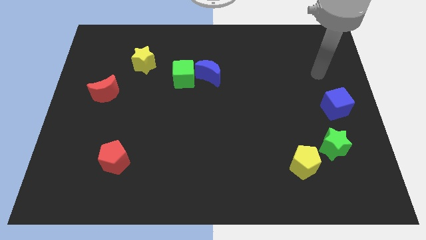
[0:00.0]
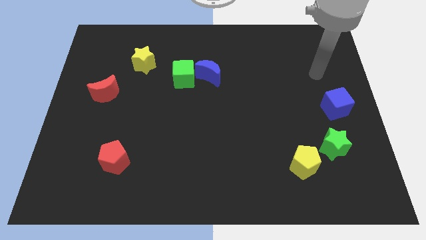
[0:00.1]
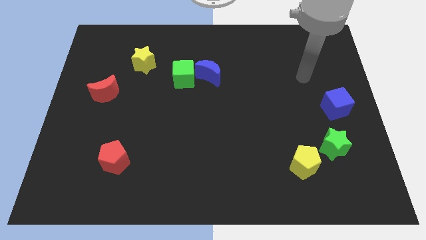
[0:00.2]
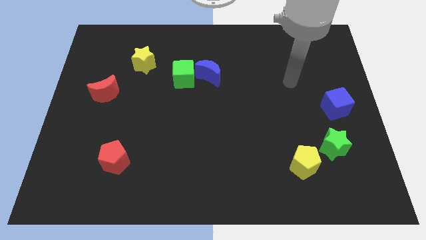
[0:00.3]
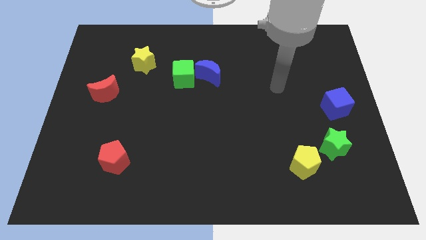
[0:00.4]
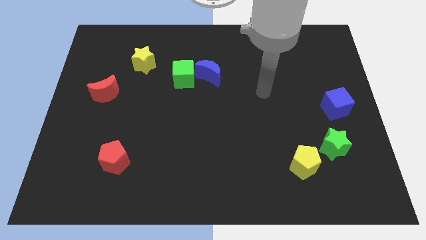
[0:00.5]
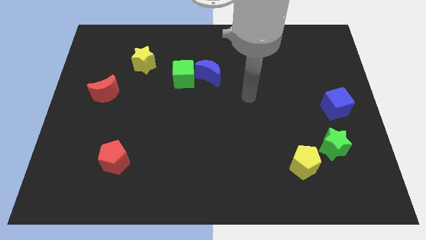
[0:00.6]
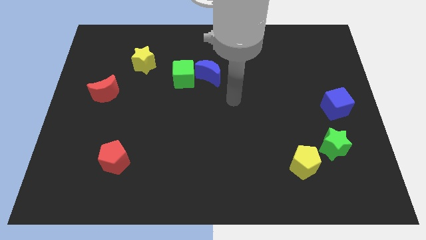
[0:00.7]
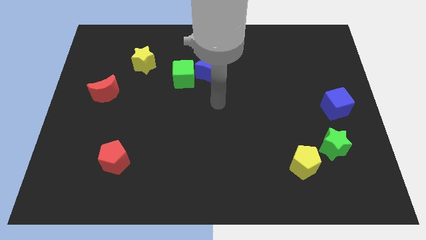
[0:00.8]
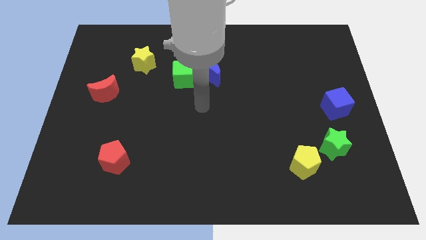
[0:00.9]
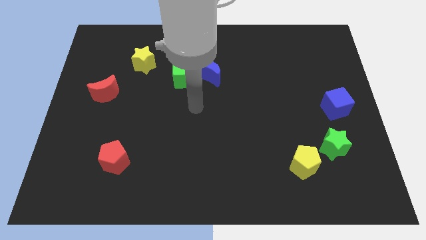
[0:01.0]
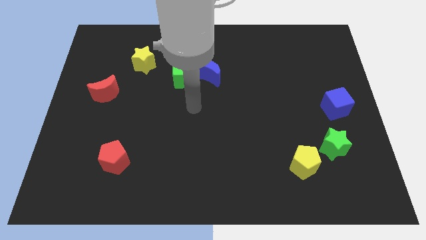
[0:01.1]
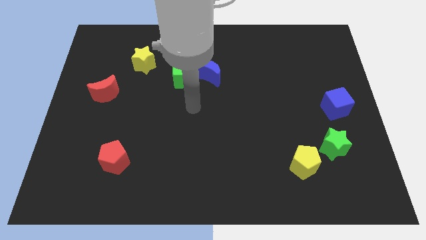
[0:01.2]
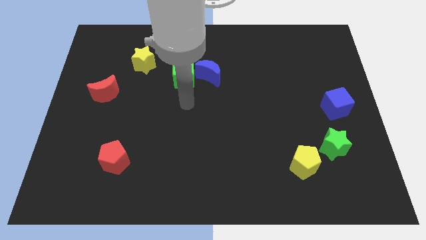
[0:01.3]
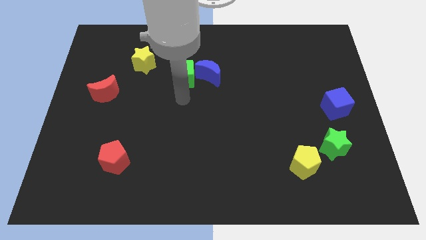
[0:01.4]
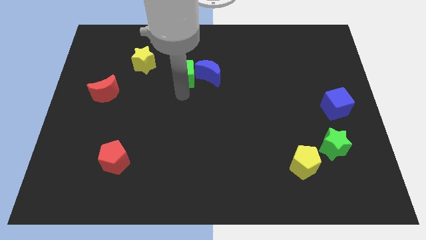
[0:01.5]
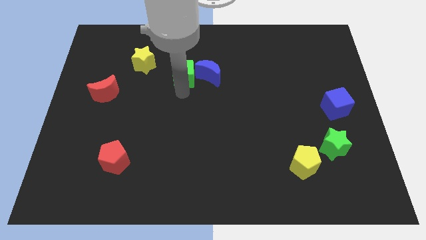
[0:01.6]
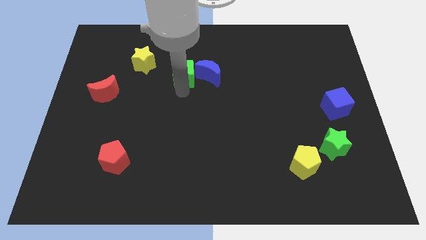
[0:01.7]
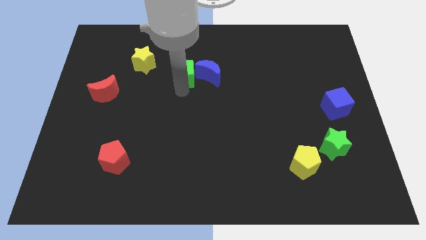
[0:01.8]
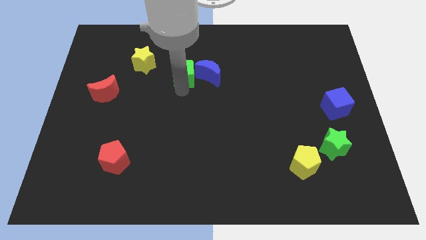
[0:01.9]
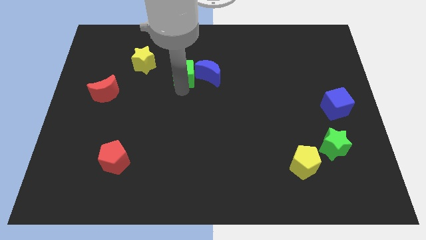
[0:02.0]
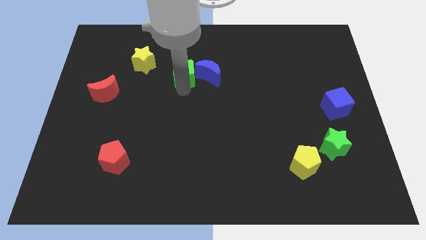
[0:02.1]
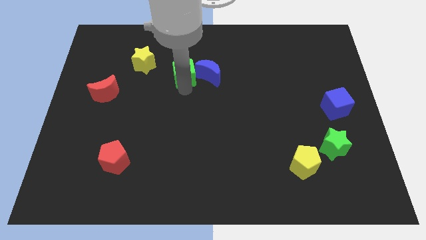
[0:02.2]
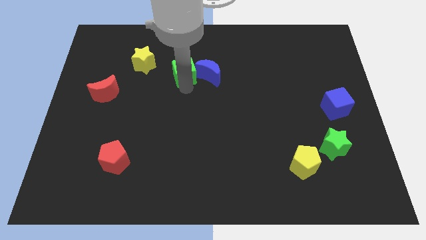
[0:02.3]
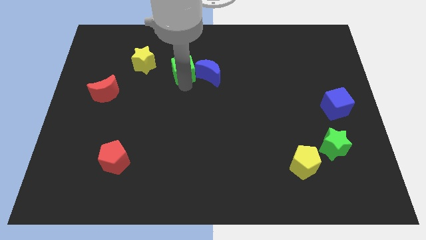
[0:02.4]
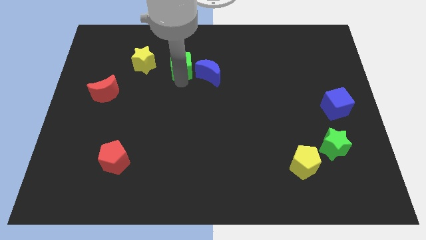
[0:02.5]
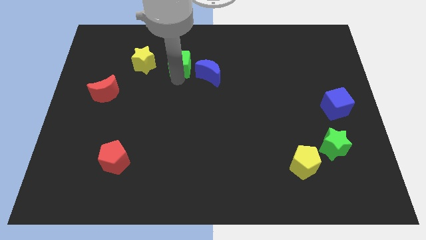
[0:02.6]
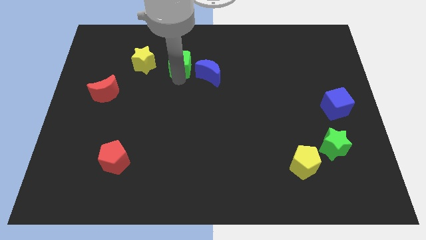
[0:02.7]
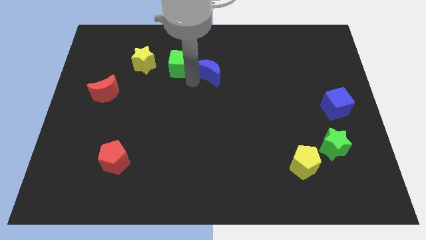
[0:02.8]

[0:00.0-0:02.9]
push the green cube upwards slightly

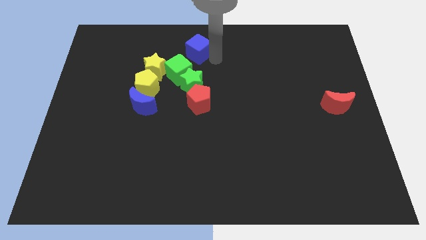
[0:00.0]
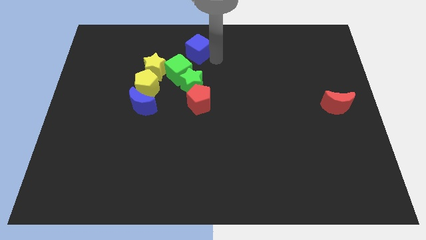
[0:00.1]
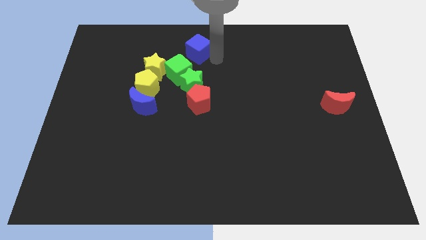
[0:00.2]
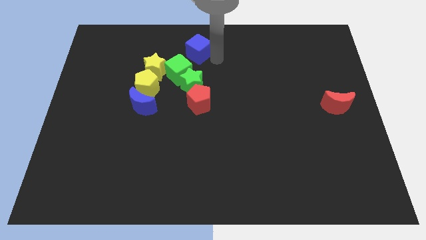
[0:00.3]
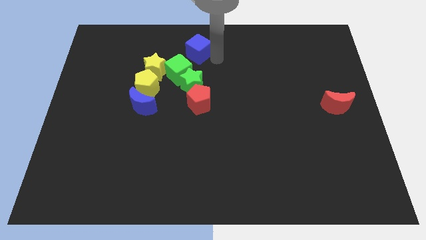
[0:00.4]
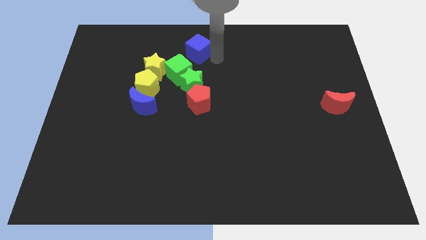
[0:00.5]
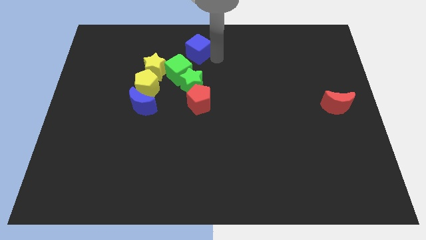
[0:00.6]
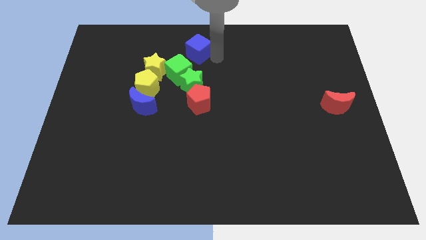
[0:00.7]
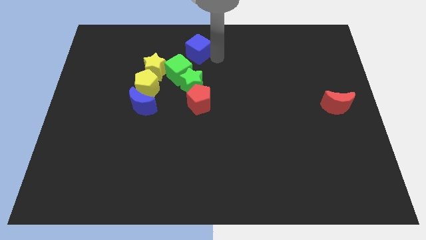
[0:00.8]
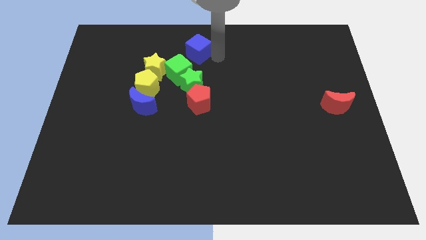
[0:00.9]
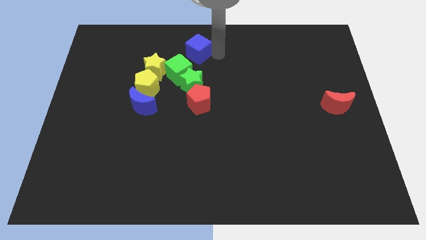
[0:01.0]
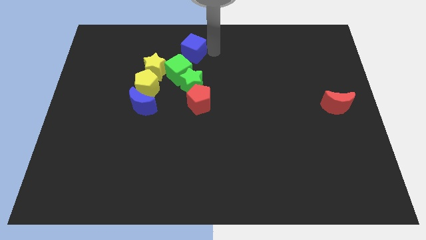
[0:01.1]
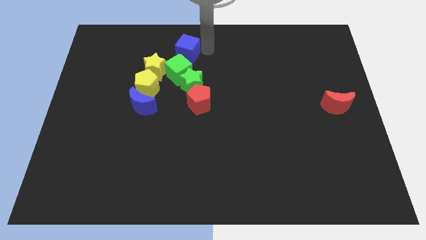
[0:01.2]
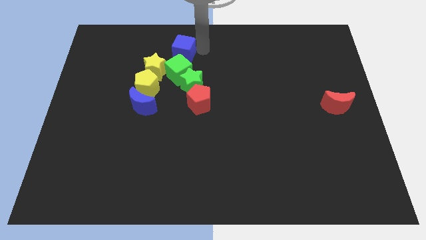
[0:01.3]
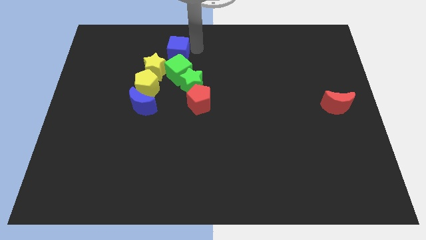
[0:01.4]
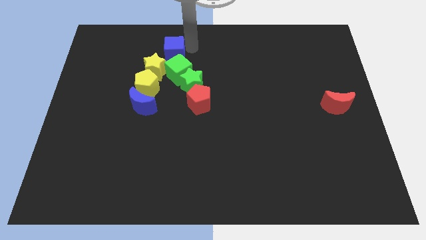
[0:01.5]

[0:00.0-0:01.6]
place the blue cube above the green cube

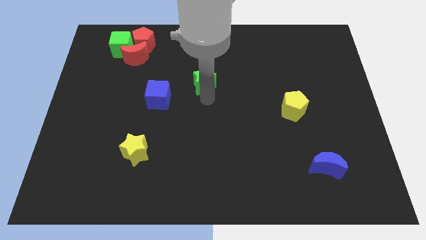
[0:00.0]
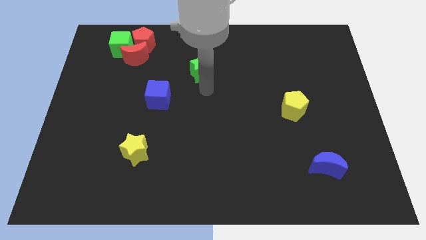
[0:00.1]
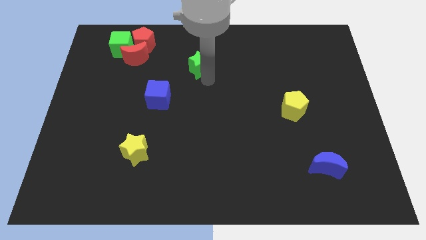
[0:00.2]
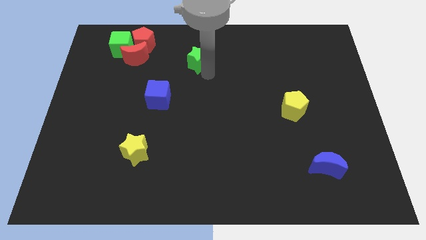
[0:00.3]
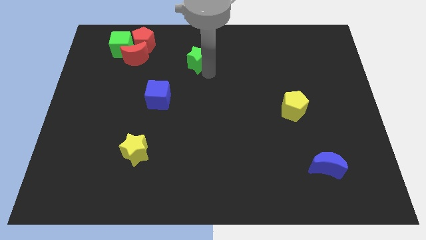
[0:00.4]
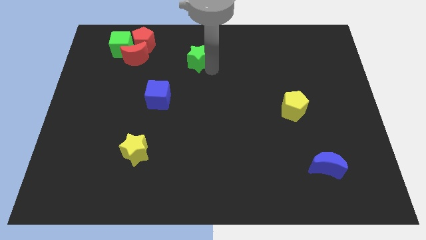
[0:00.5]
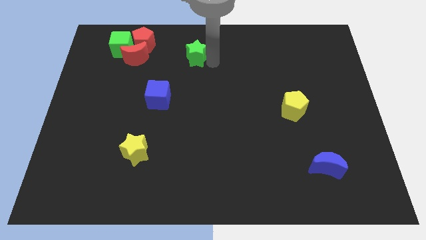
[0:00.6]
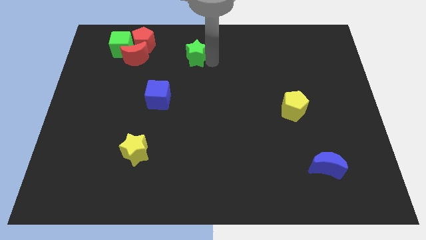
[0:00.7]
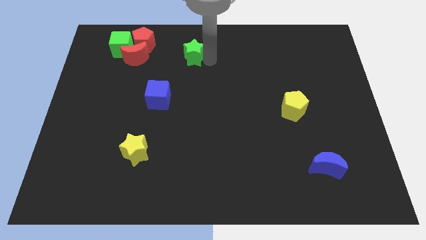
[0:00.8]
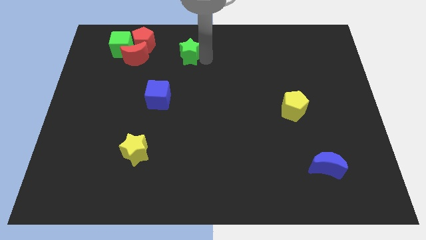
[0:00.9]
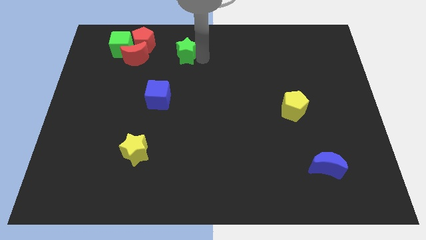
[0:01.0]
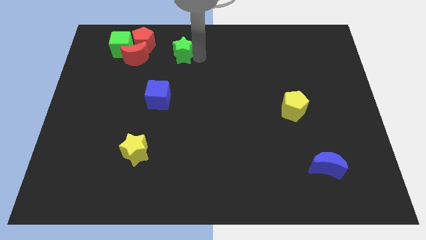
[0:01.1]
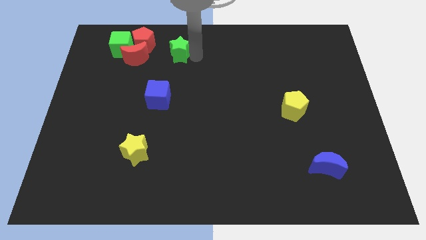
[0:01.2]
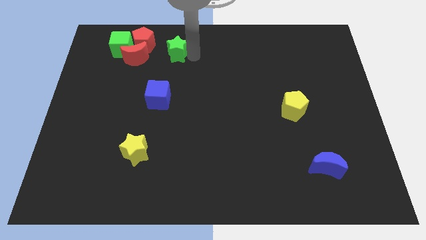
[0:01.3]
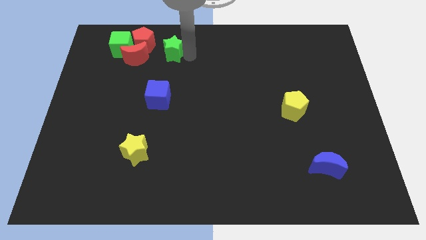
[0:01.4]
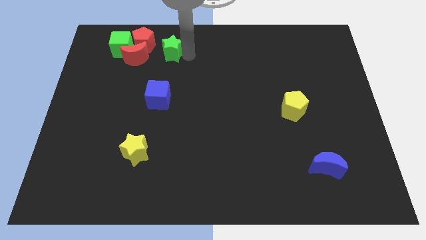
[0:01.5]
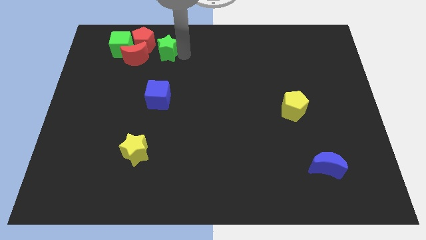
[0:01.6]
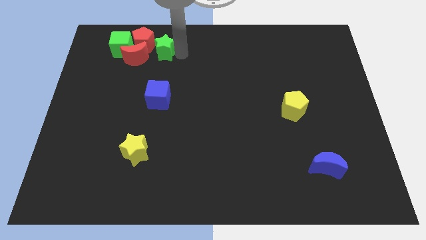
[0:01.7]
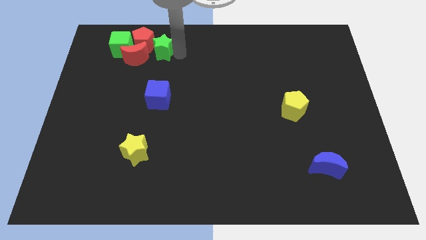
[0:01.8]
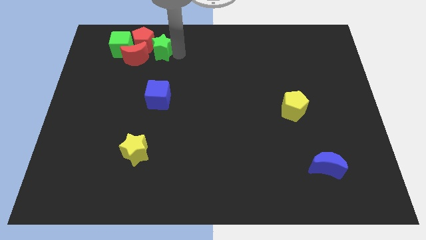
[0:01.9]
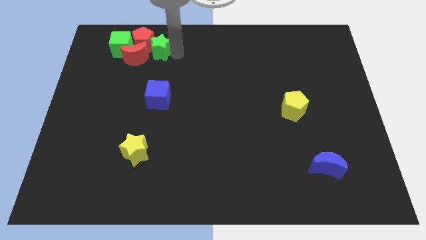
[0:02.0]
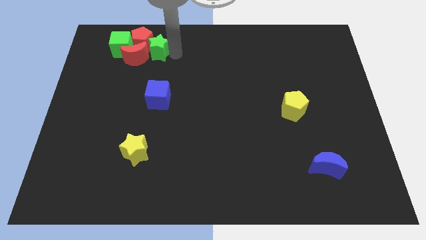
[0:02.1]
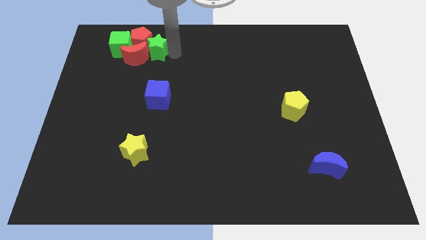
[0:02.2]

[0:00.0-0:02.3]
push the green star into the red pentagon

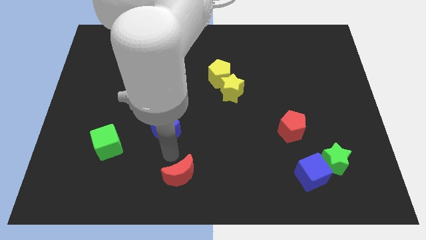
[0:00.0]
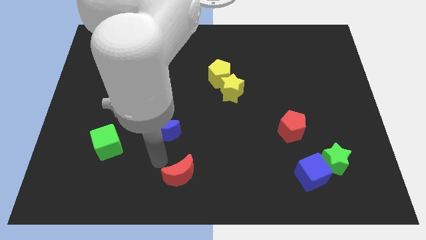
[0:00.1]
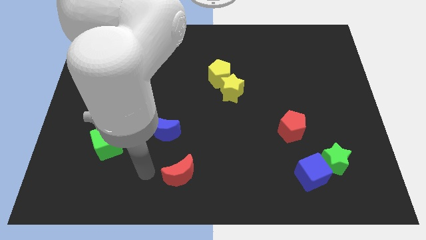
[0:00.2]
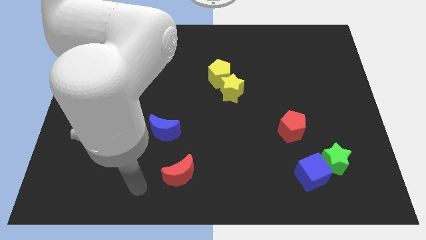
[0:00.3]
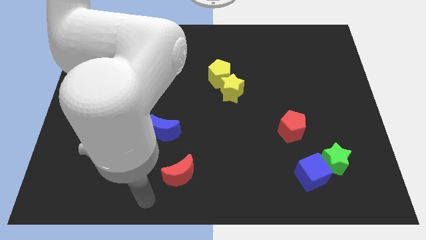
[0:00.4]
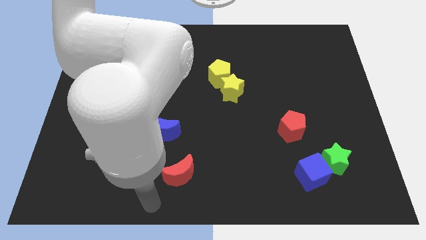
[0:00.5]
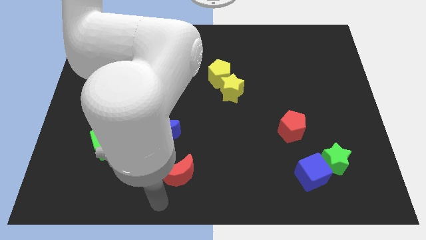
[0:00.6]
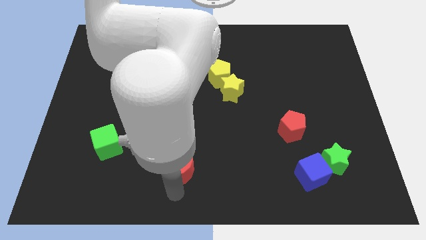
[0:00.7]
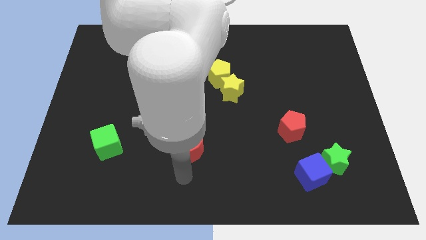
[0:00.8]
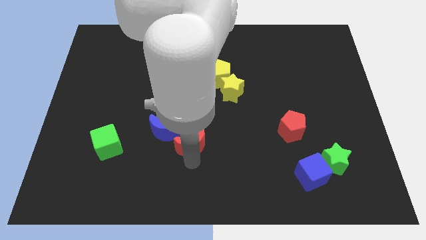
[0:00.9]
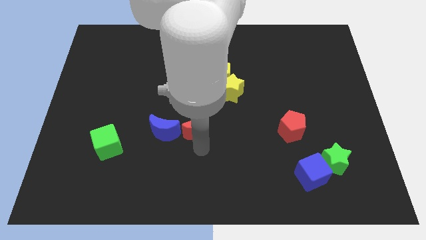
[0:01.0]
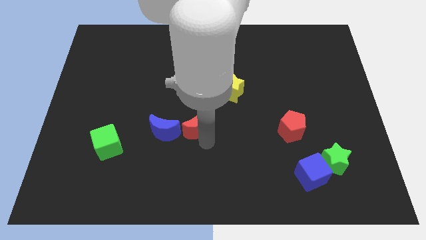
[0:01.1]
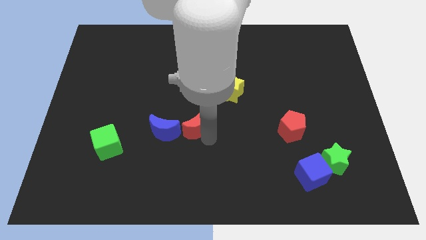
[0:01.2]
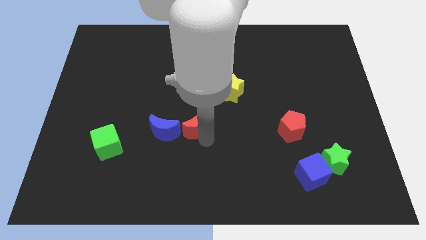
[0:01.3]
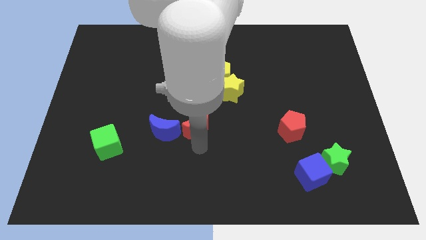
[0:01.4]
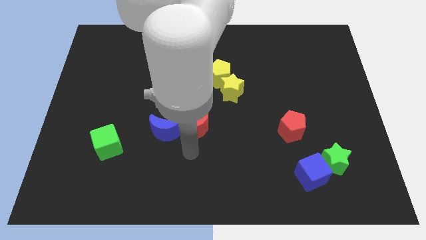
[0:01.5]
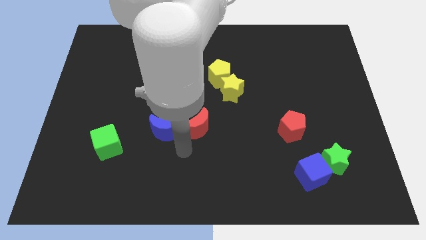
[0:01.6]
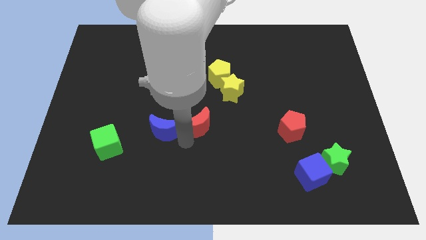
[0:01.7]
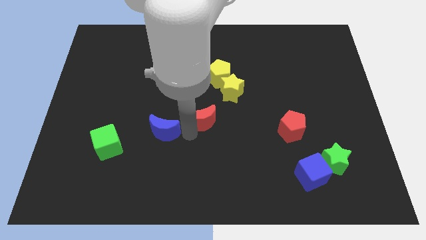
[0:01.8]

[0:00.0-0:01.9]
place red crescent to the right of blue crescent

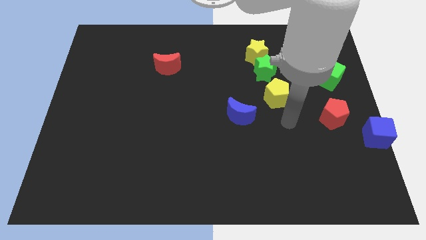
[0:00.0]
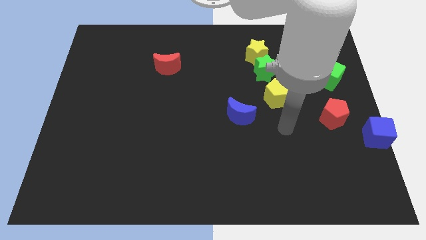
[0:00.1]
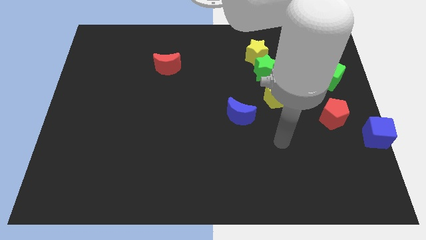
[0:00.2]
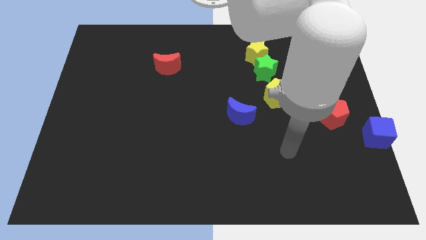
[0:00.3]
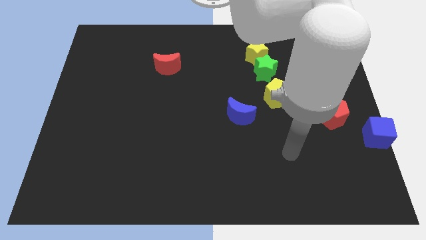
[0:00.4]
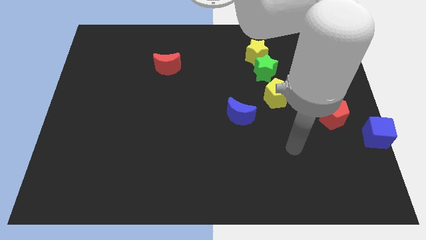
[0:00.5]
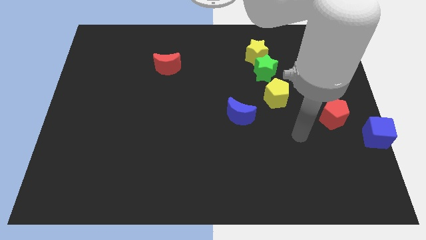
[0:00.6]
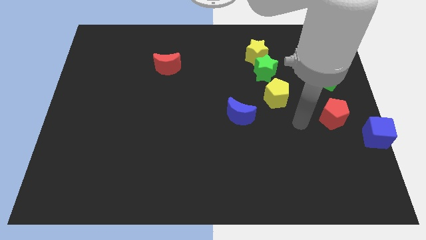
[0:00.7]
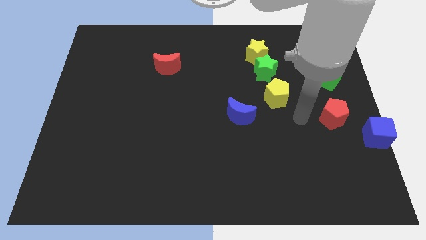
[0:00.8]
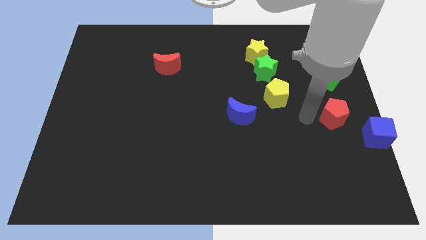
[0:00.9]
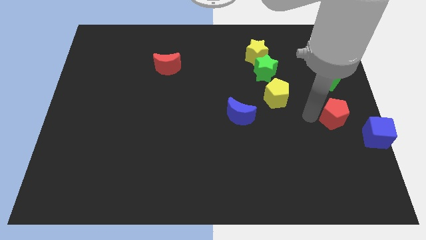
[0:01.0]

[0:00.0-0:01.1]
place your arm at the left of the red pentagon
